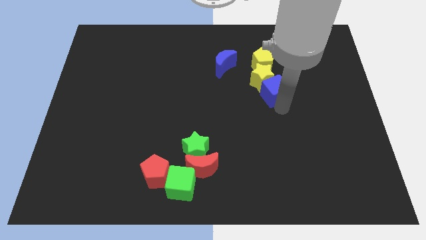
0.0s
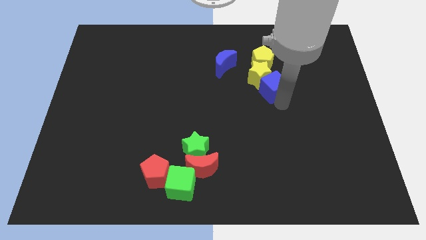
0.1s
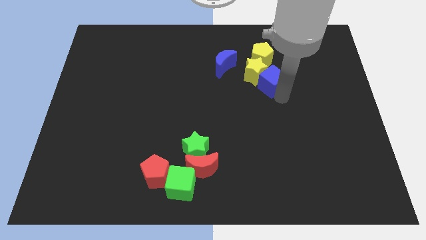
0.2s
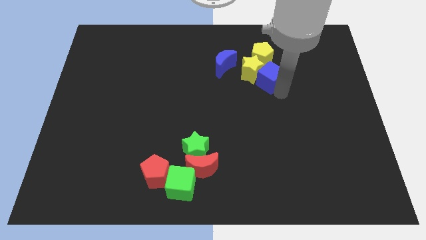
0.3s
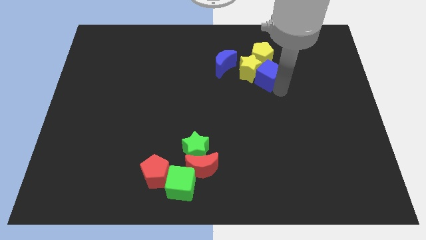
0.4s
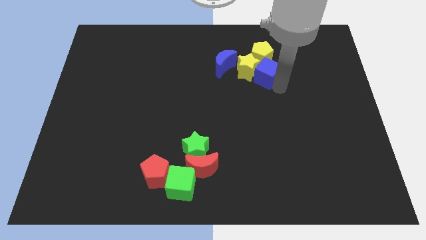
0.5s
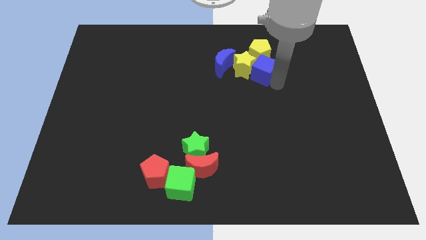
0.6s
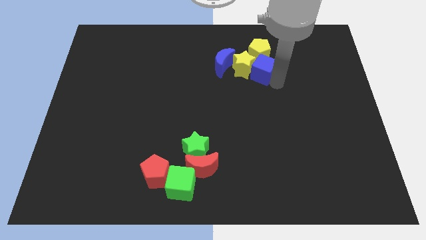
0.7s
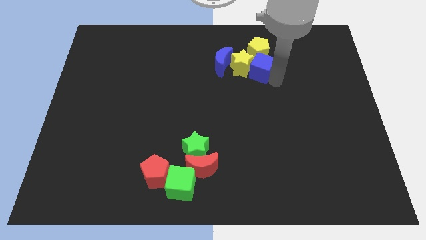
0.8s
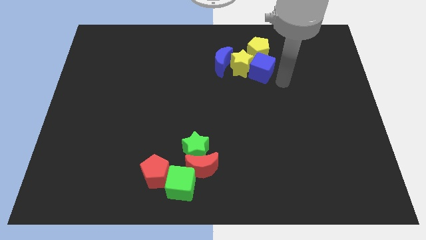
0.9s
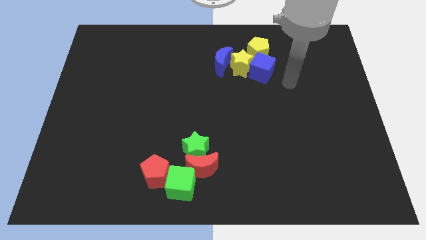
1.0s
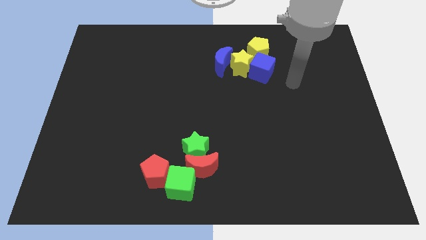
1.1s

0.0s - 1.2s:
adjust the blue cube at the bottom of the yellow pentagon

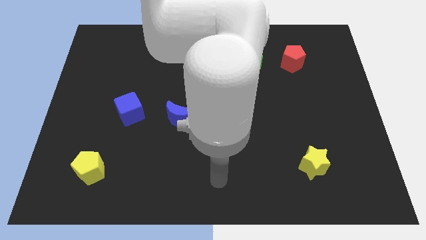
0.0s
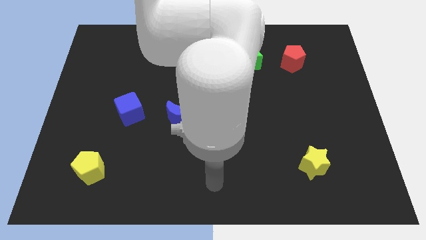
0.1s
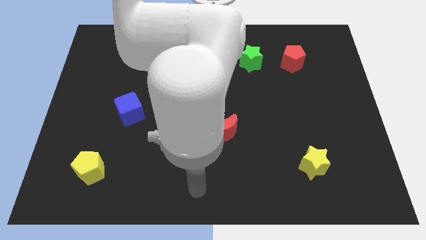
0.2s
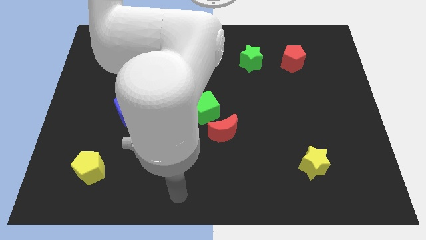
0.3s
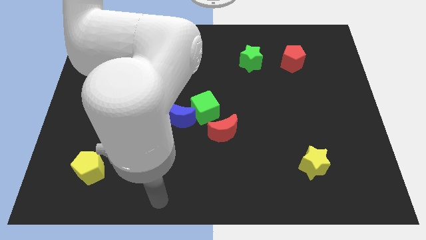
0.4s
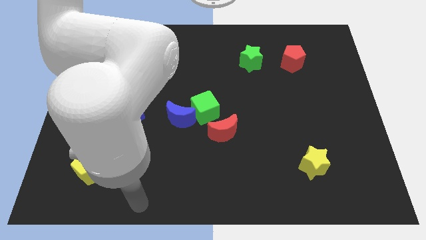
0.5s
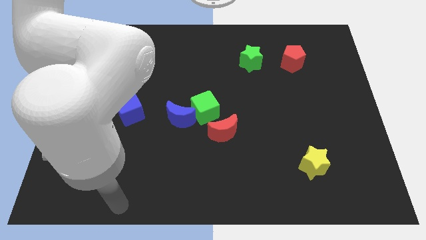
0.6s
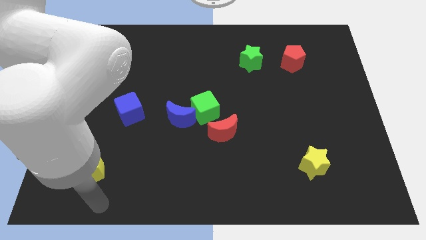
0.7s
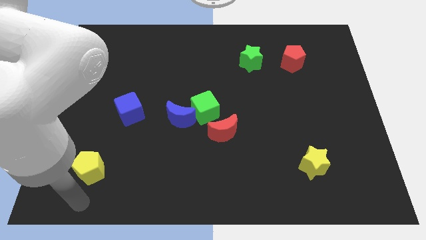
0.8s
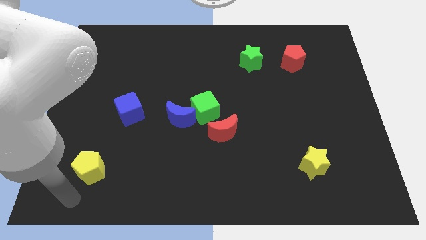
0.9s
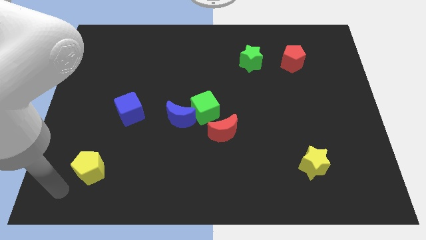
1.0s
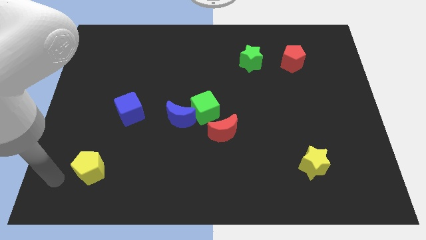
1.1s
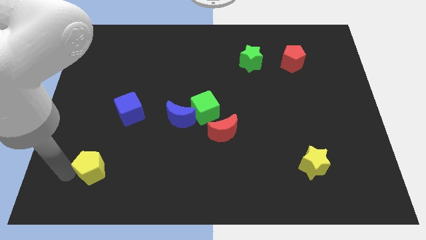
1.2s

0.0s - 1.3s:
touch the yellow pentagon

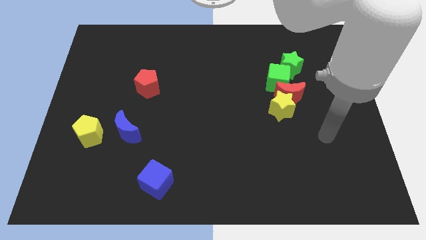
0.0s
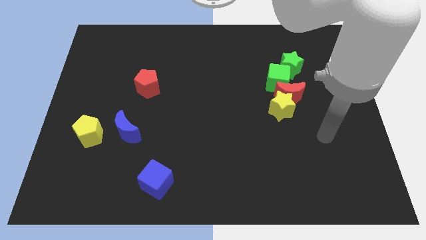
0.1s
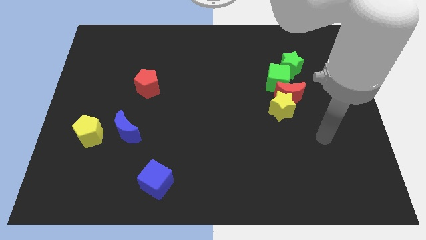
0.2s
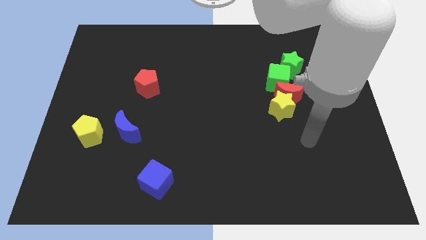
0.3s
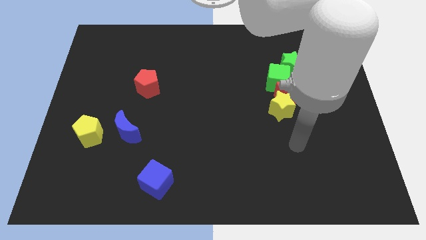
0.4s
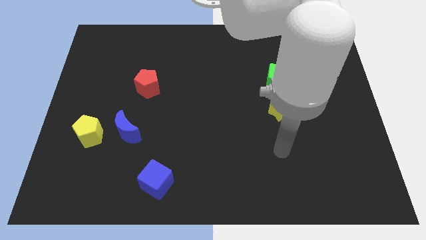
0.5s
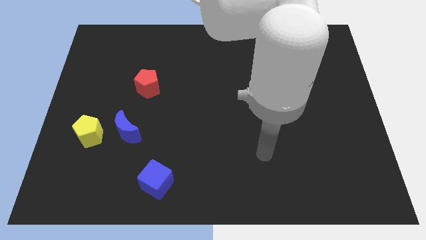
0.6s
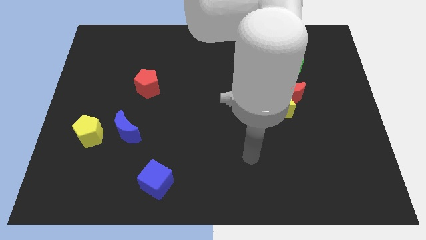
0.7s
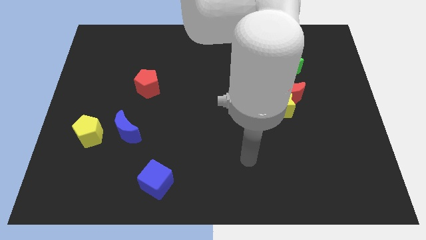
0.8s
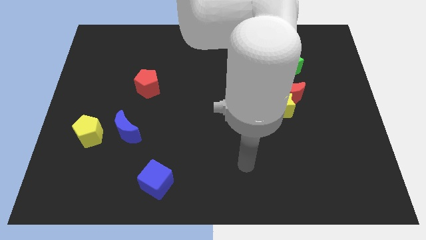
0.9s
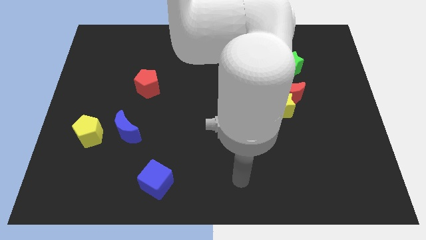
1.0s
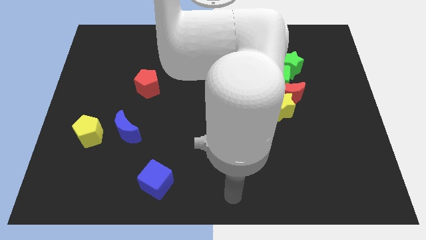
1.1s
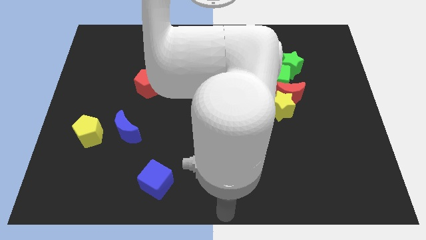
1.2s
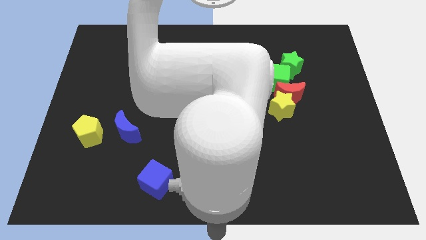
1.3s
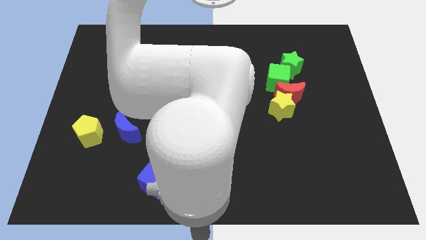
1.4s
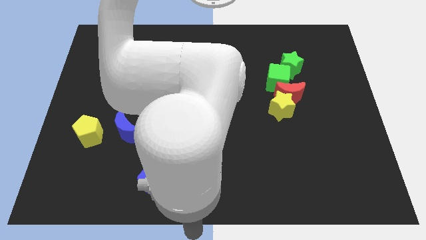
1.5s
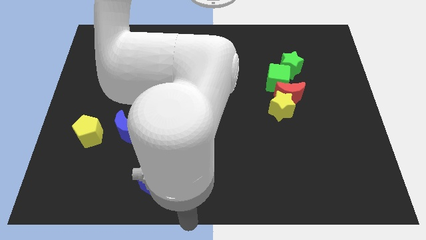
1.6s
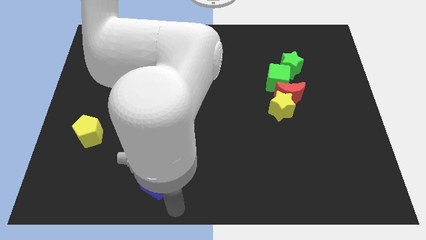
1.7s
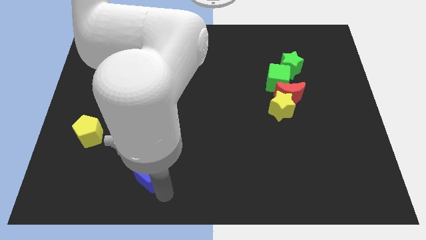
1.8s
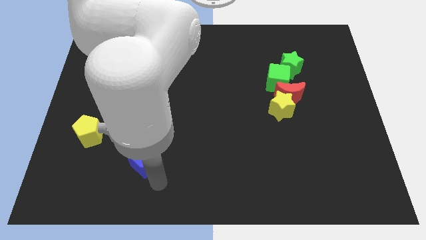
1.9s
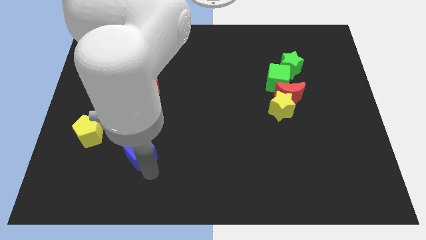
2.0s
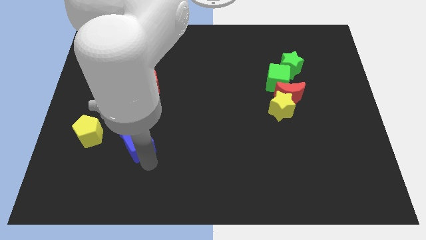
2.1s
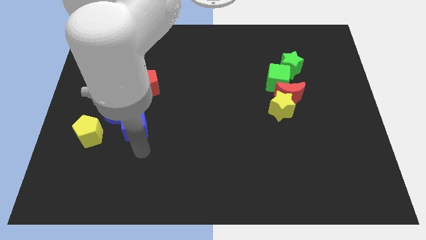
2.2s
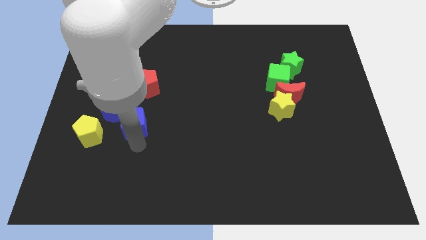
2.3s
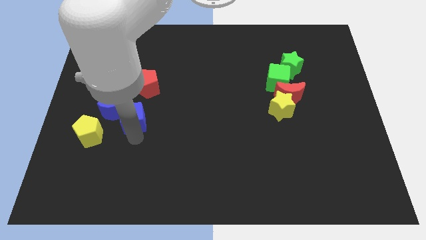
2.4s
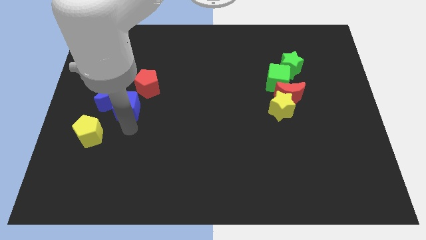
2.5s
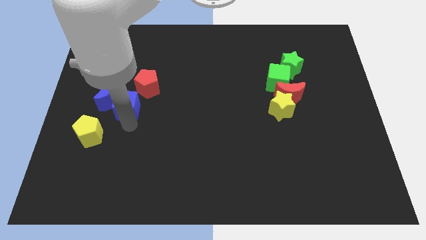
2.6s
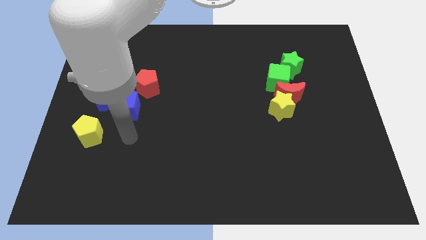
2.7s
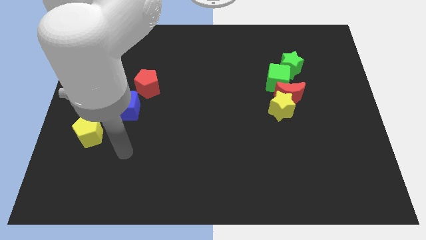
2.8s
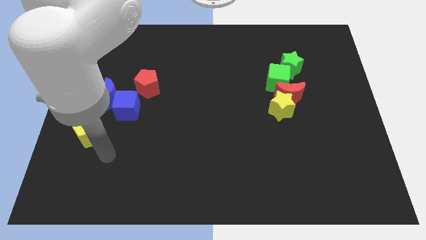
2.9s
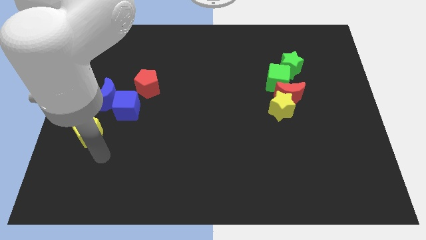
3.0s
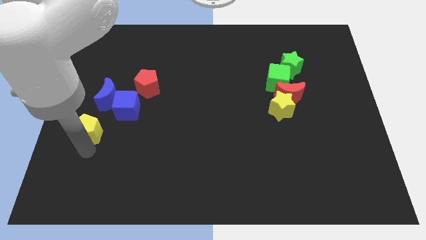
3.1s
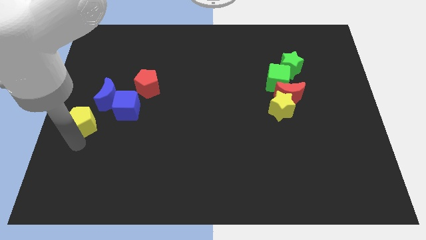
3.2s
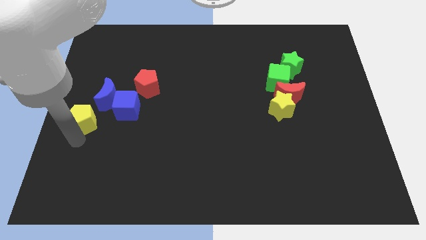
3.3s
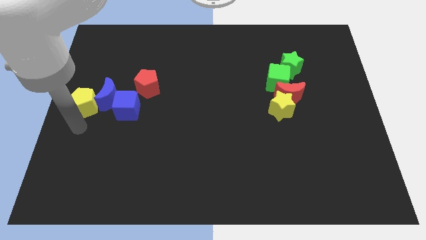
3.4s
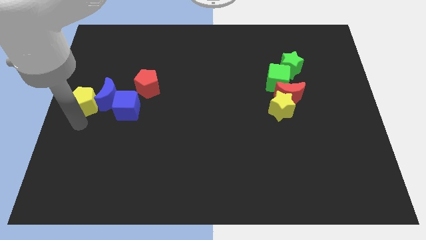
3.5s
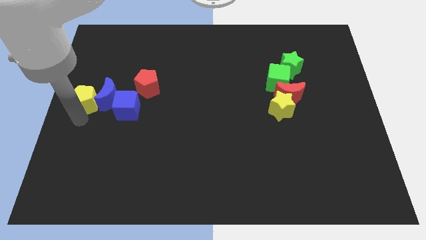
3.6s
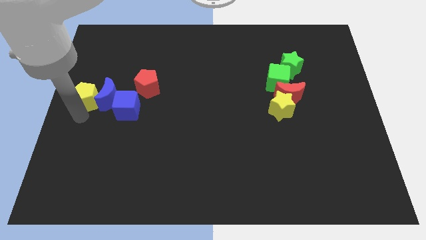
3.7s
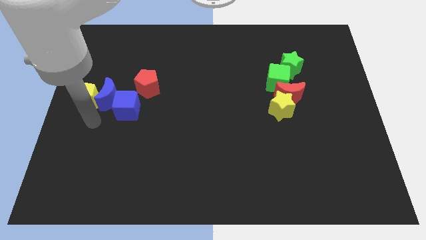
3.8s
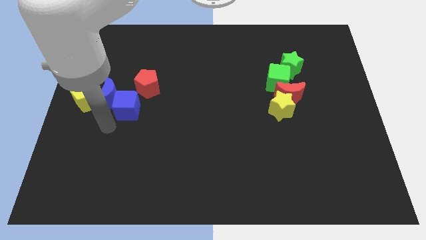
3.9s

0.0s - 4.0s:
push the blue cube into the blue crescent

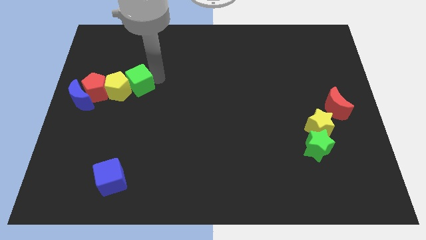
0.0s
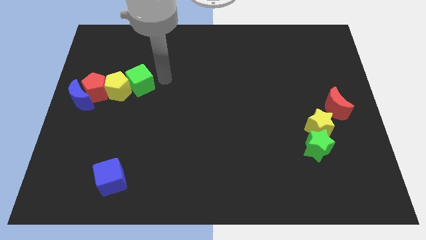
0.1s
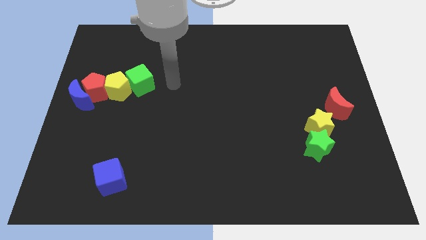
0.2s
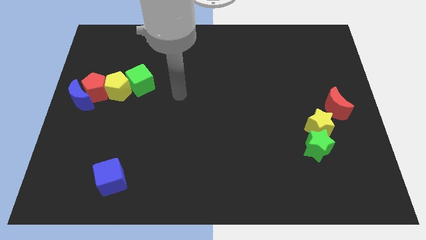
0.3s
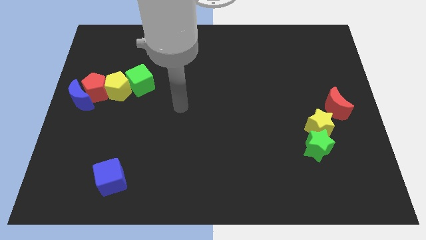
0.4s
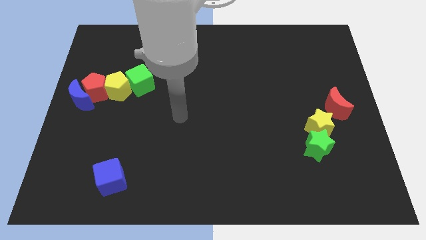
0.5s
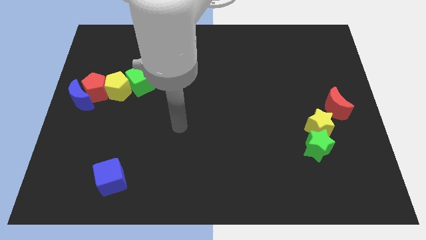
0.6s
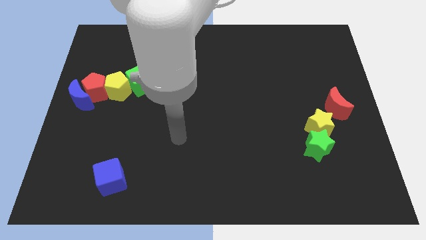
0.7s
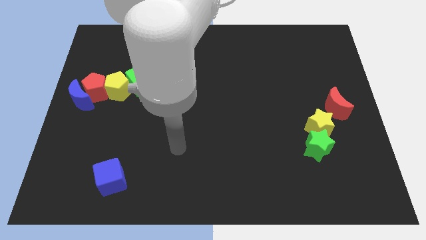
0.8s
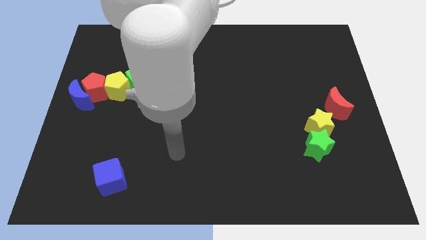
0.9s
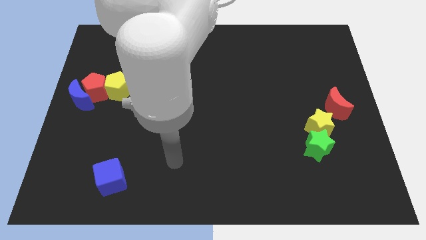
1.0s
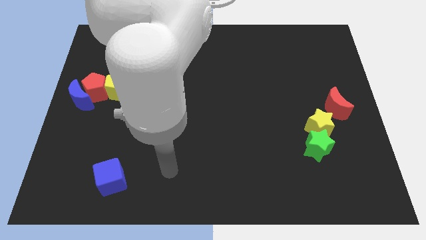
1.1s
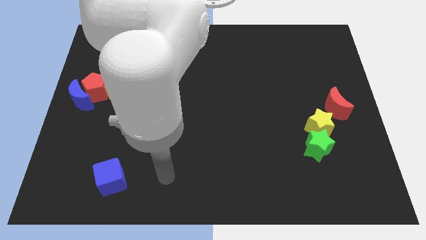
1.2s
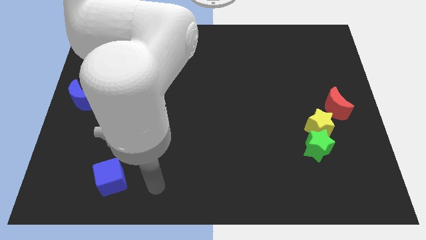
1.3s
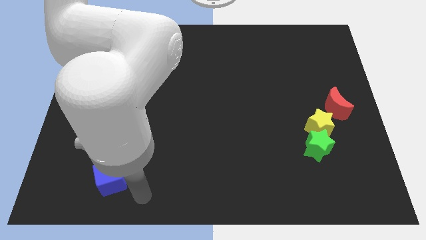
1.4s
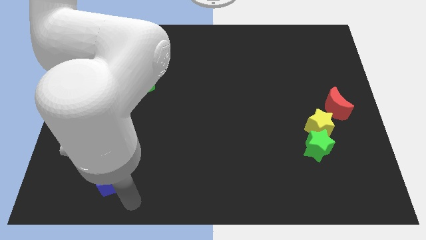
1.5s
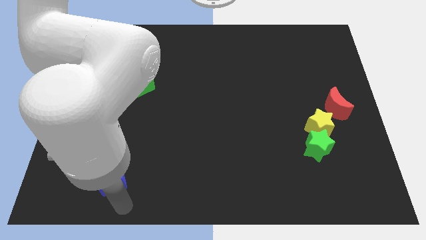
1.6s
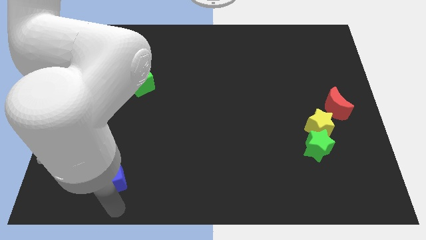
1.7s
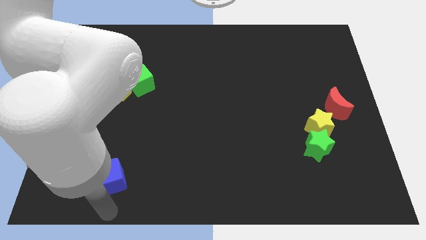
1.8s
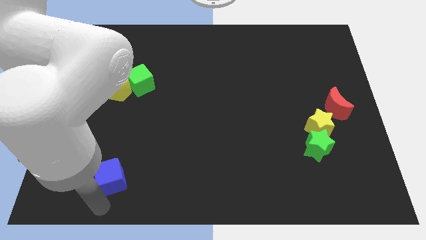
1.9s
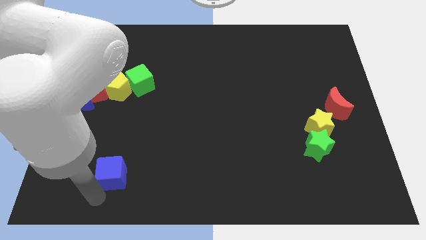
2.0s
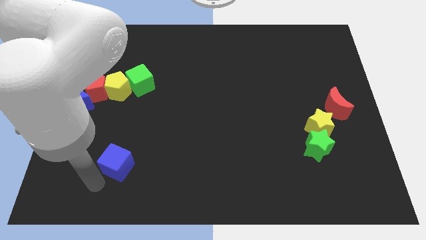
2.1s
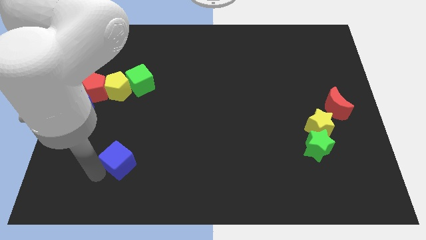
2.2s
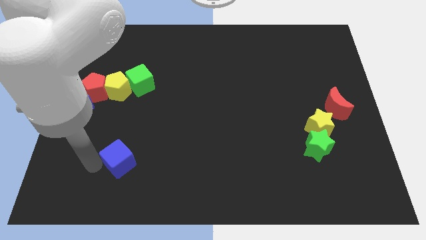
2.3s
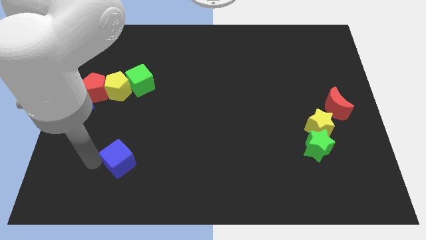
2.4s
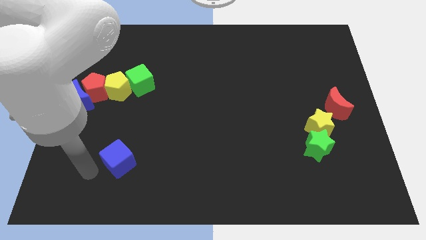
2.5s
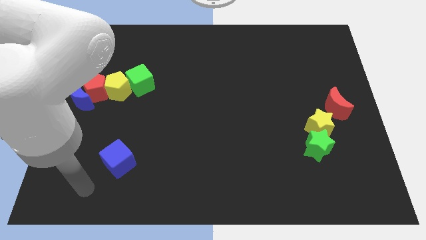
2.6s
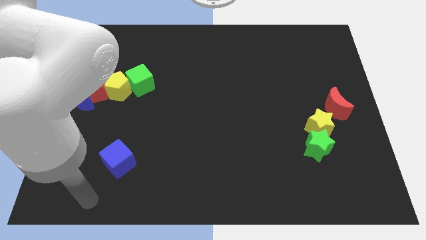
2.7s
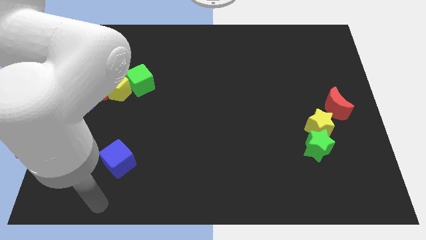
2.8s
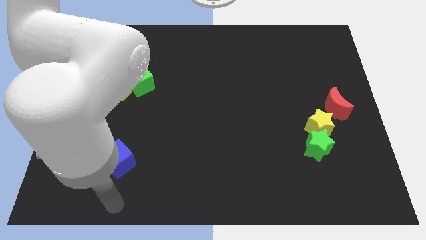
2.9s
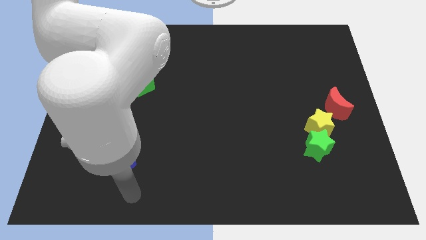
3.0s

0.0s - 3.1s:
push the blue cube slightly upwards
